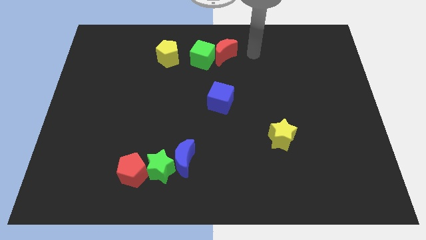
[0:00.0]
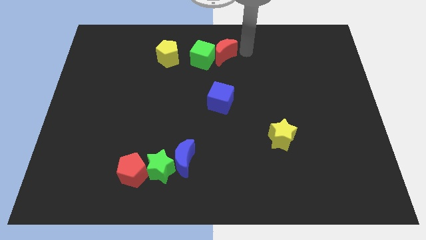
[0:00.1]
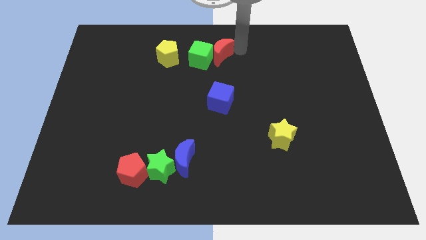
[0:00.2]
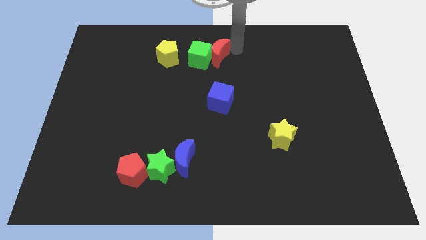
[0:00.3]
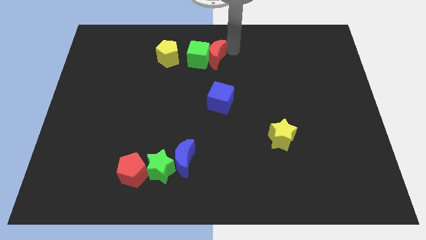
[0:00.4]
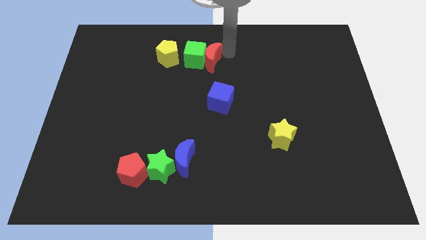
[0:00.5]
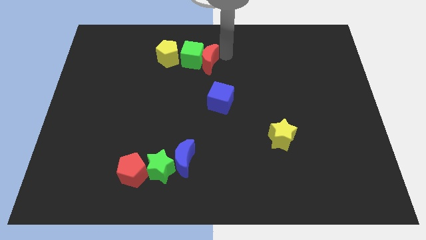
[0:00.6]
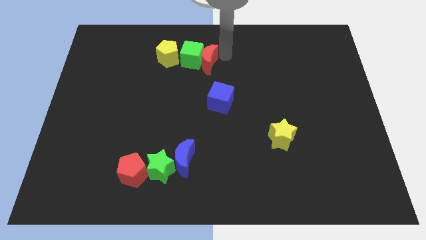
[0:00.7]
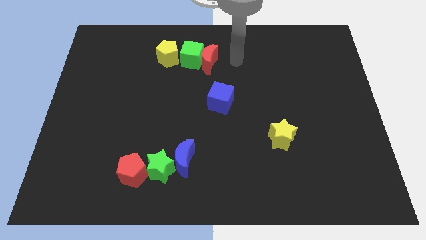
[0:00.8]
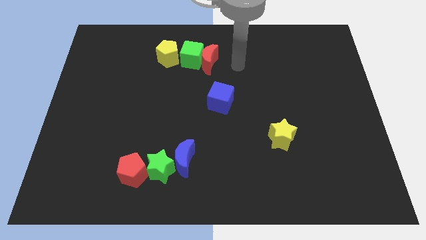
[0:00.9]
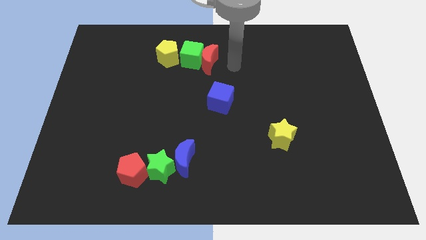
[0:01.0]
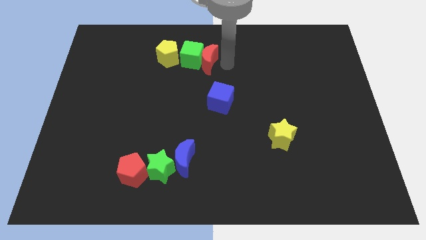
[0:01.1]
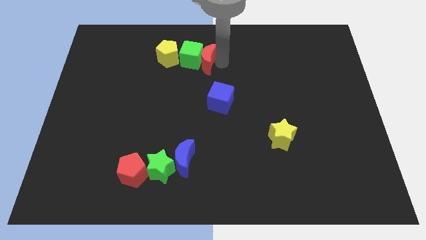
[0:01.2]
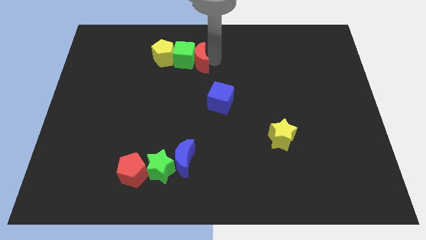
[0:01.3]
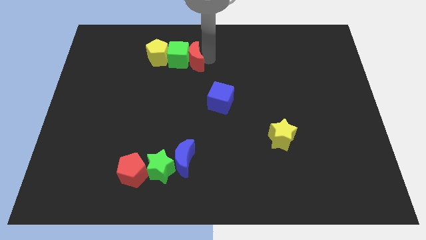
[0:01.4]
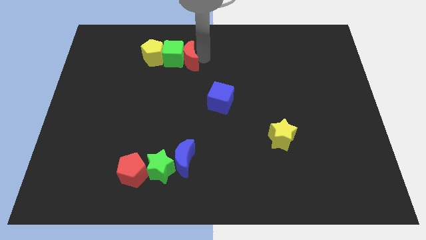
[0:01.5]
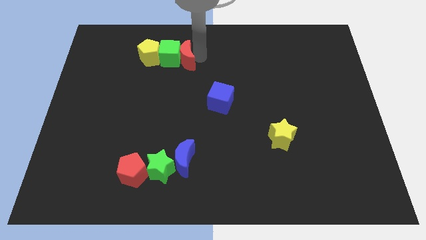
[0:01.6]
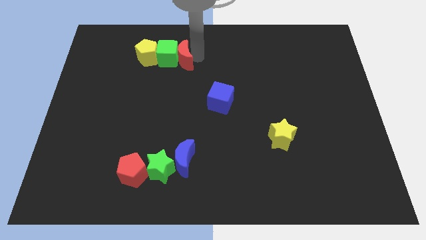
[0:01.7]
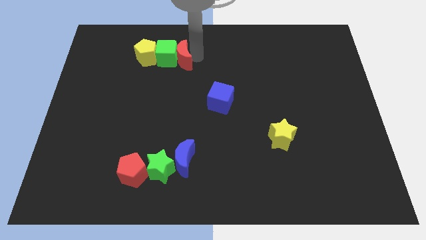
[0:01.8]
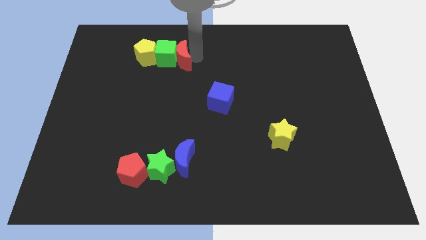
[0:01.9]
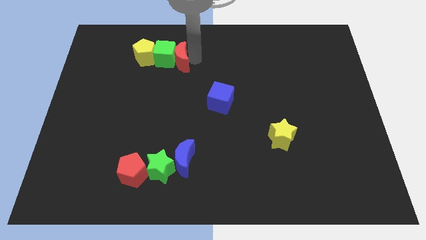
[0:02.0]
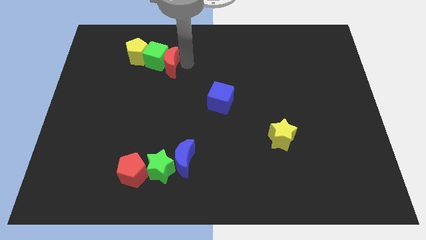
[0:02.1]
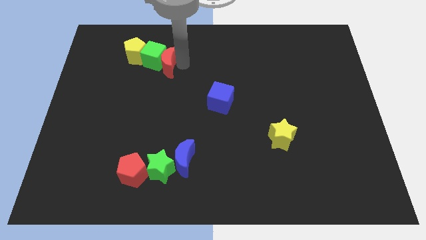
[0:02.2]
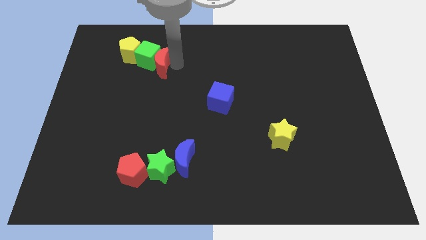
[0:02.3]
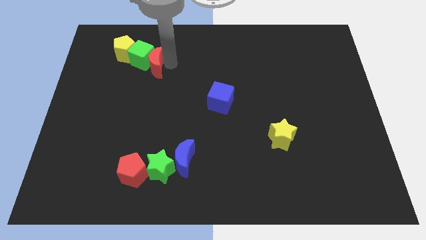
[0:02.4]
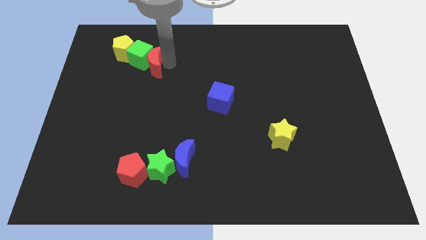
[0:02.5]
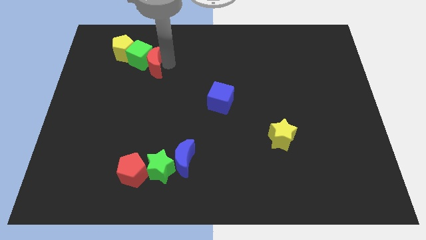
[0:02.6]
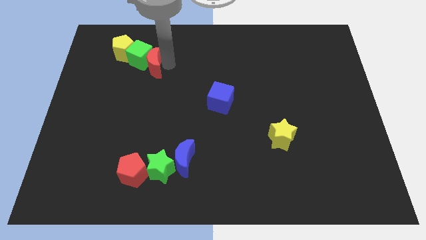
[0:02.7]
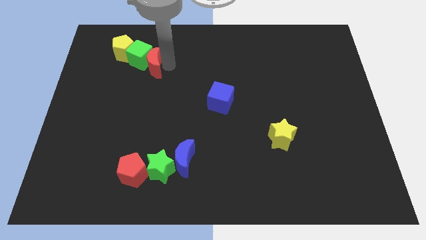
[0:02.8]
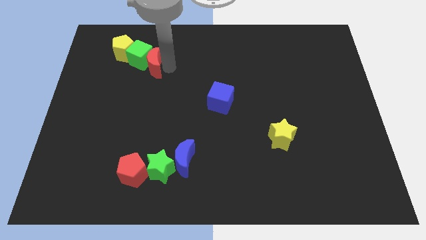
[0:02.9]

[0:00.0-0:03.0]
push the green cube with red crescent

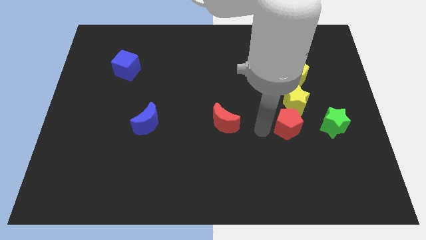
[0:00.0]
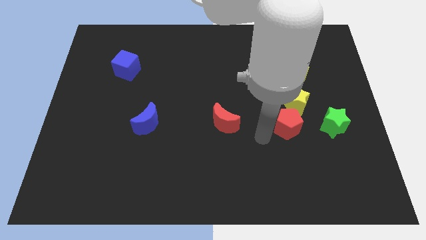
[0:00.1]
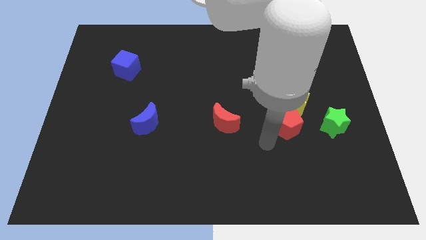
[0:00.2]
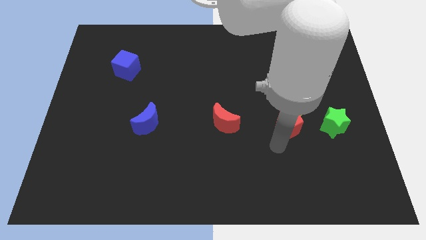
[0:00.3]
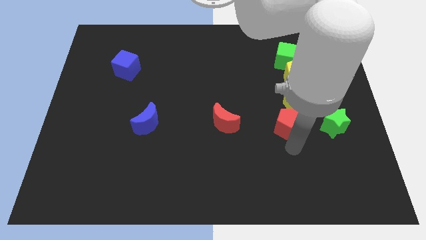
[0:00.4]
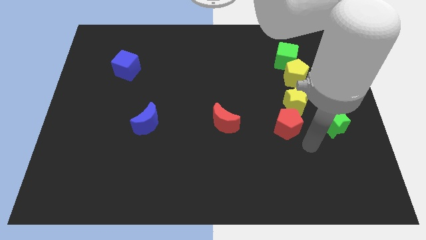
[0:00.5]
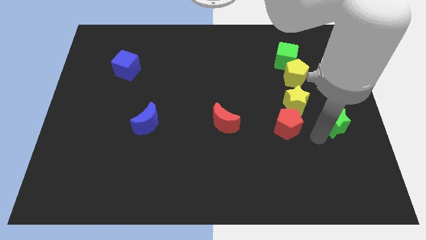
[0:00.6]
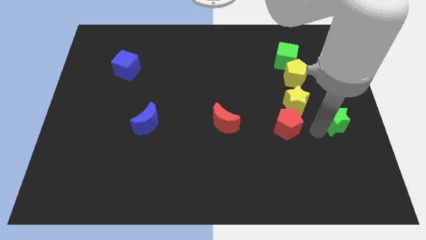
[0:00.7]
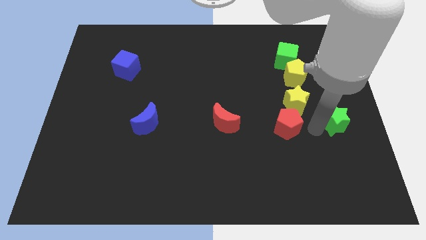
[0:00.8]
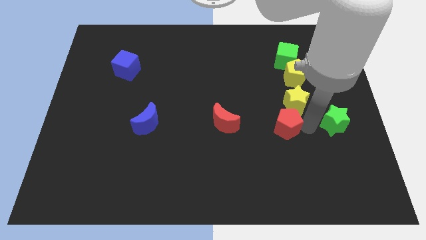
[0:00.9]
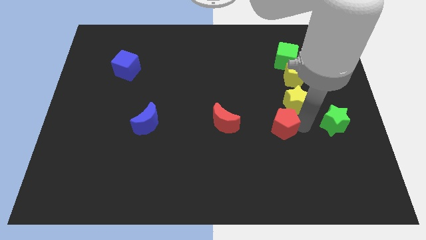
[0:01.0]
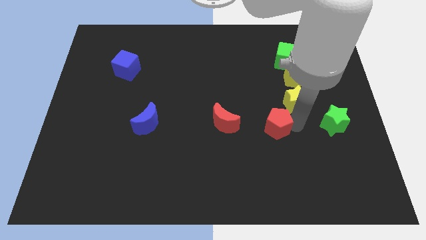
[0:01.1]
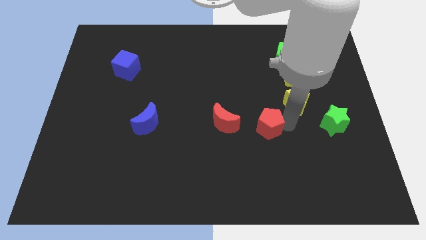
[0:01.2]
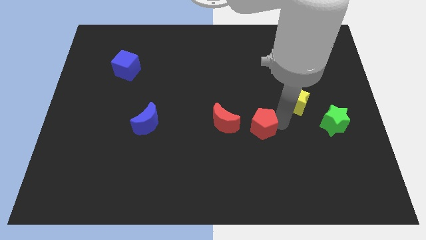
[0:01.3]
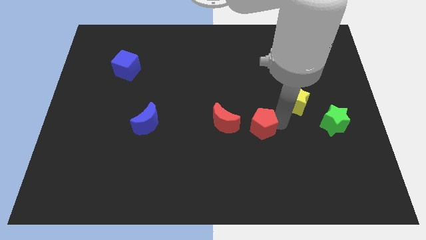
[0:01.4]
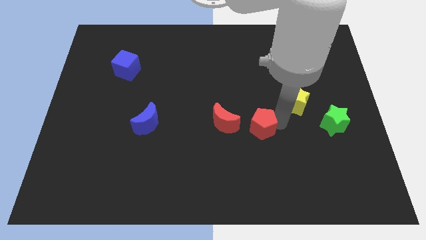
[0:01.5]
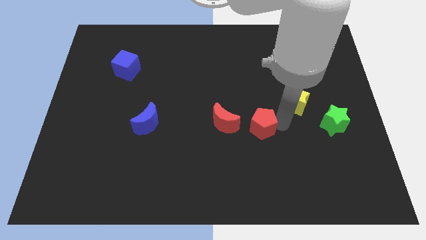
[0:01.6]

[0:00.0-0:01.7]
push the red pentagon towards the red crescent

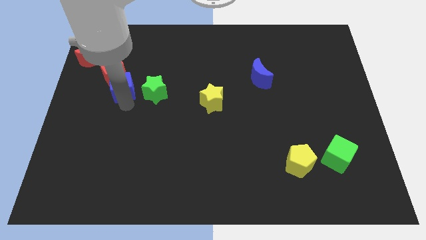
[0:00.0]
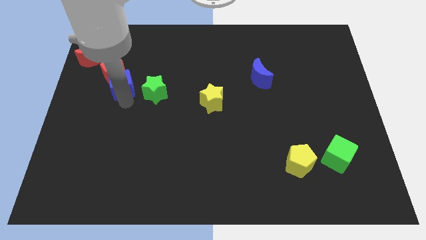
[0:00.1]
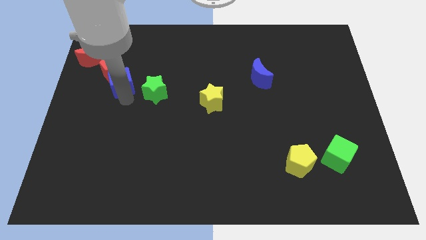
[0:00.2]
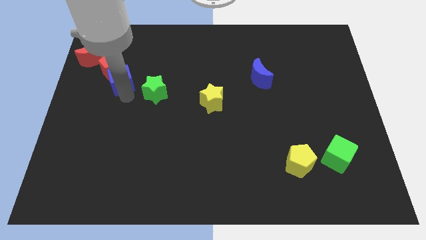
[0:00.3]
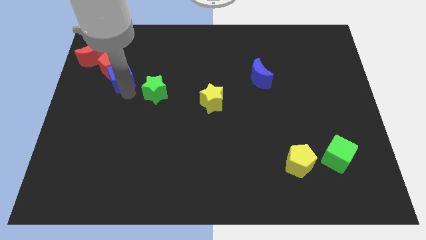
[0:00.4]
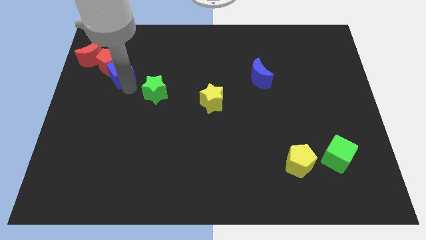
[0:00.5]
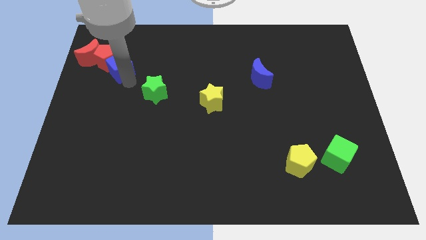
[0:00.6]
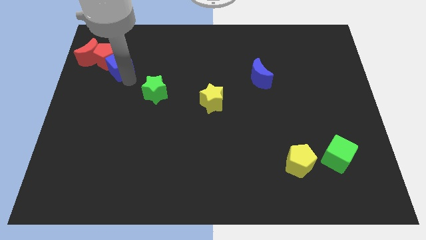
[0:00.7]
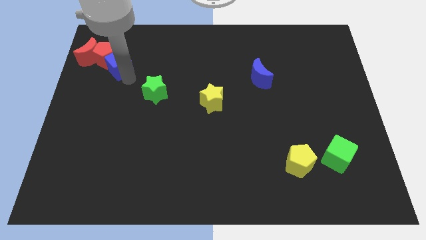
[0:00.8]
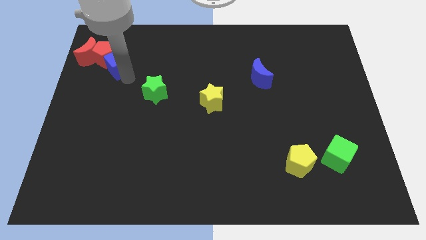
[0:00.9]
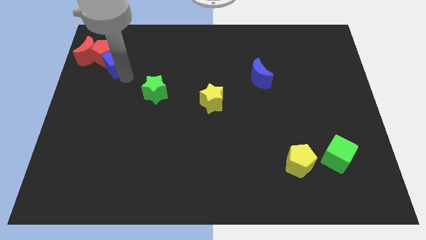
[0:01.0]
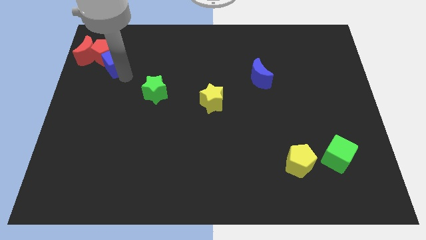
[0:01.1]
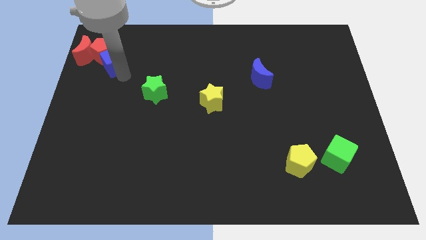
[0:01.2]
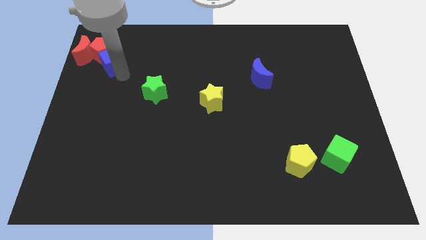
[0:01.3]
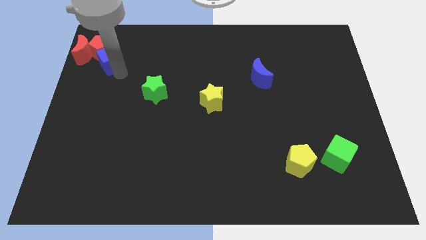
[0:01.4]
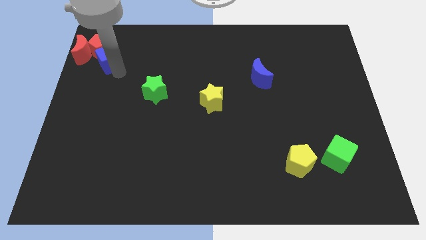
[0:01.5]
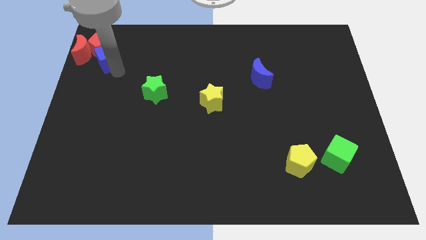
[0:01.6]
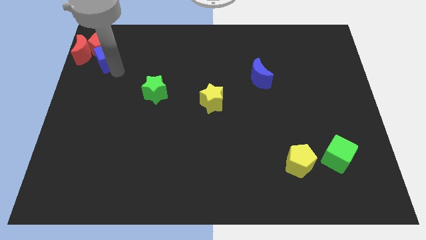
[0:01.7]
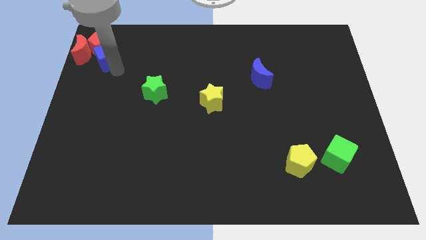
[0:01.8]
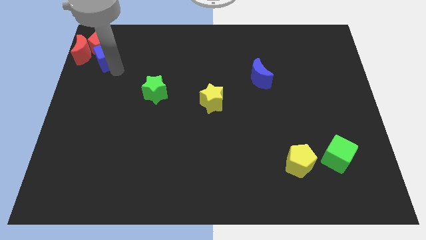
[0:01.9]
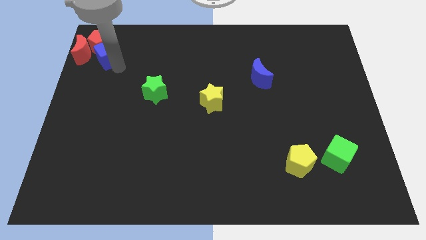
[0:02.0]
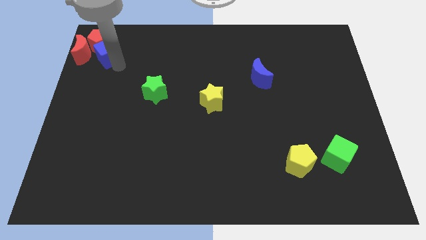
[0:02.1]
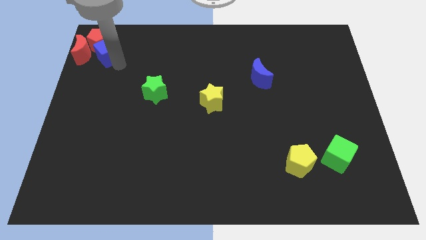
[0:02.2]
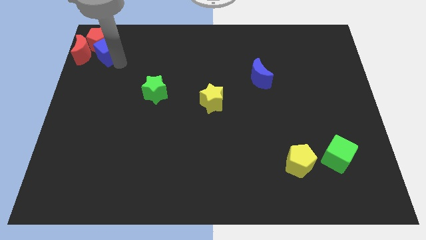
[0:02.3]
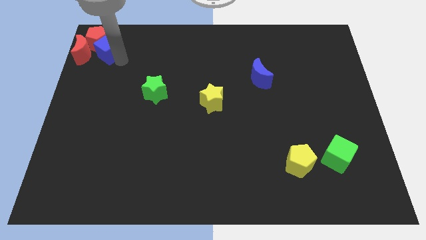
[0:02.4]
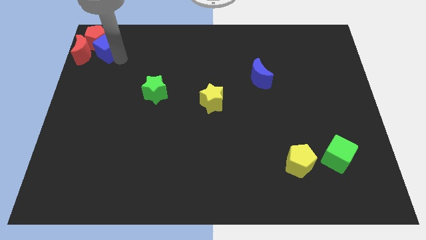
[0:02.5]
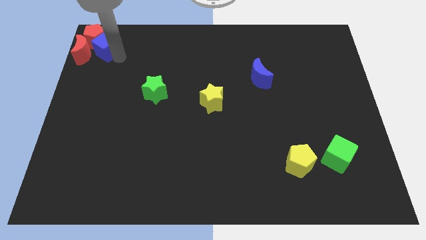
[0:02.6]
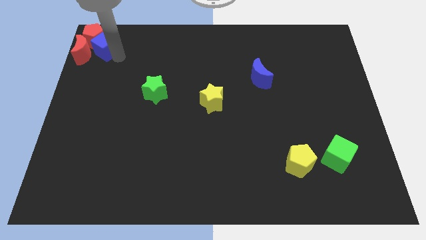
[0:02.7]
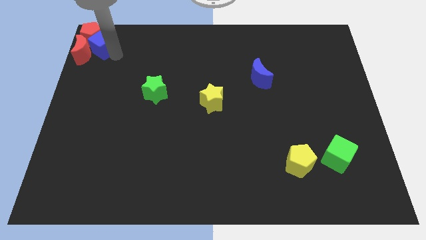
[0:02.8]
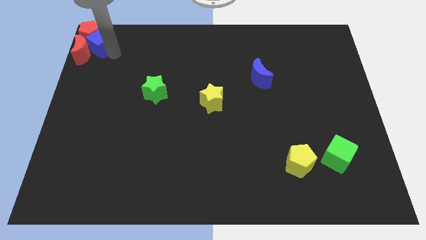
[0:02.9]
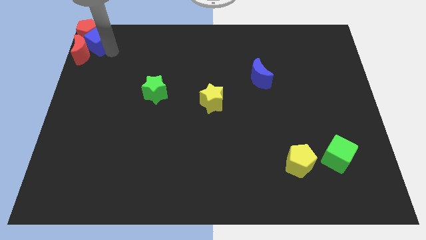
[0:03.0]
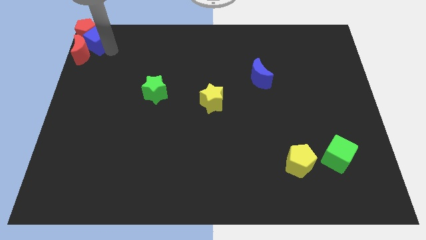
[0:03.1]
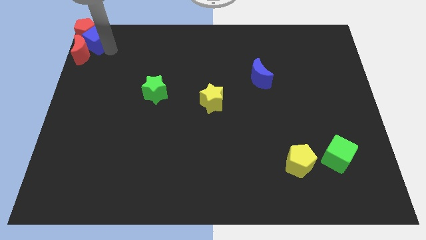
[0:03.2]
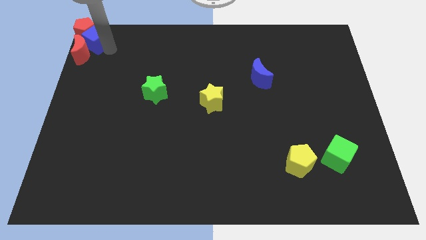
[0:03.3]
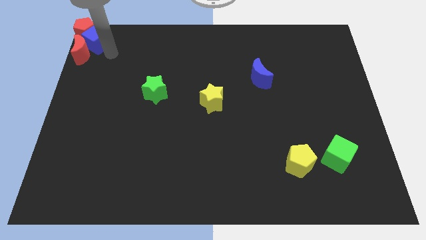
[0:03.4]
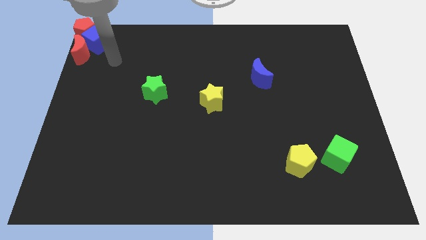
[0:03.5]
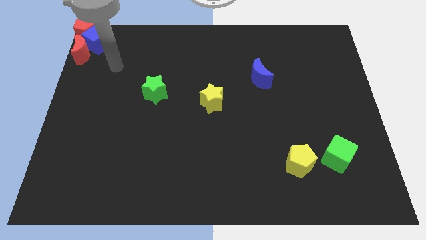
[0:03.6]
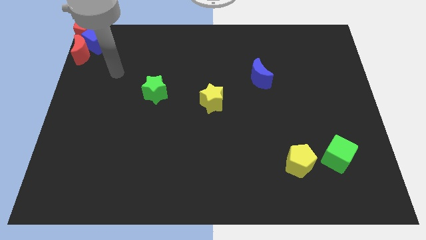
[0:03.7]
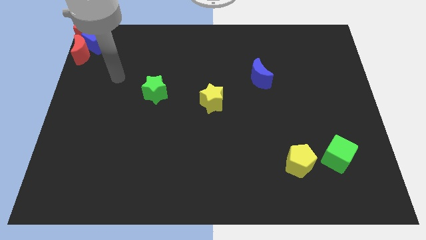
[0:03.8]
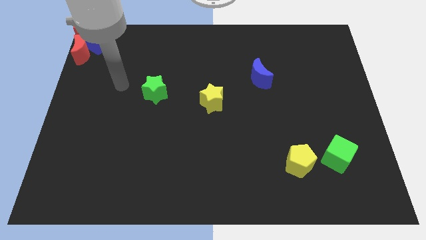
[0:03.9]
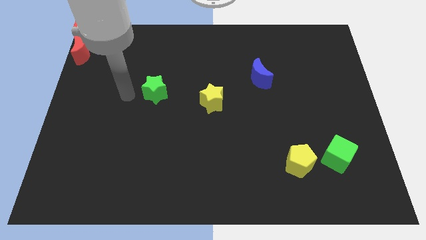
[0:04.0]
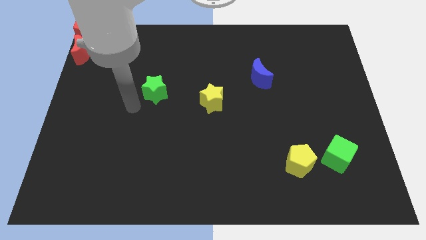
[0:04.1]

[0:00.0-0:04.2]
push blue cube along with red pentagon to the top left
